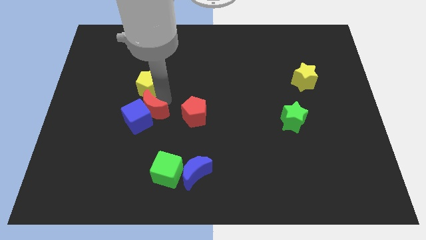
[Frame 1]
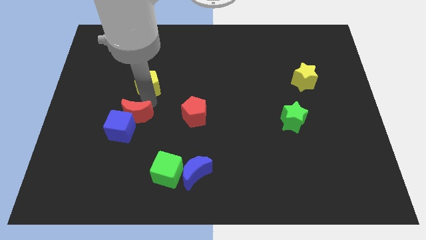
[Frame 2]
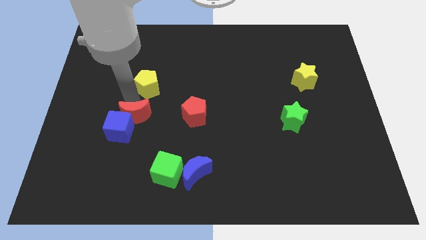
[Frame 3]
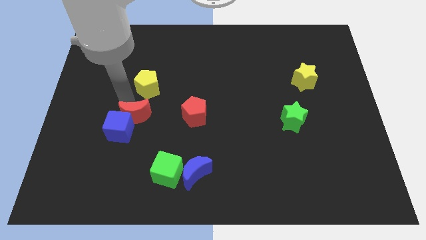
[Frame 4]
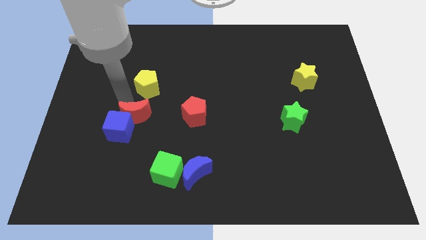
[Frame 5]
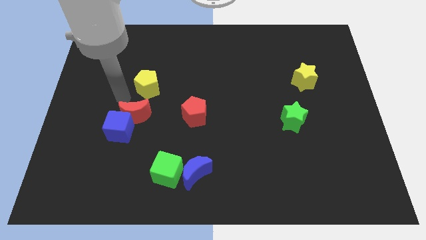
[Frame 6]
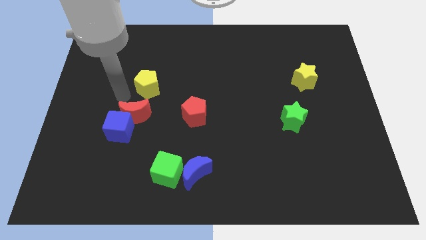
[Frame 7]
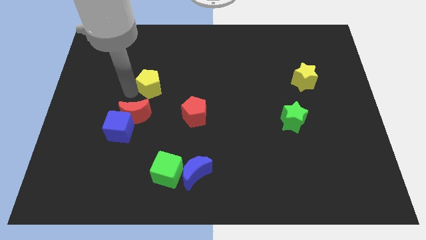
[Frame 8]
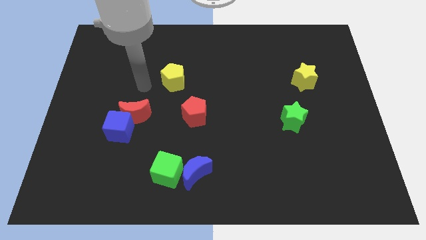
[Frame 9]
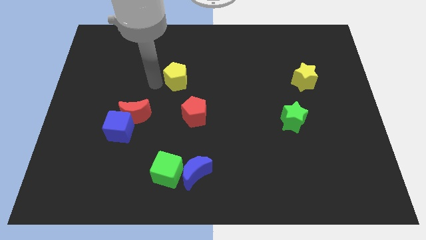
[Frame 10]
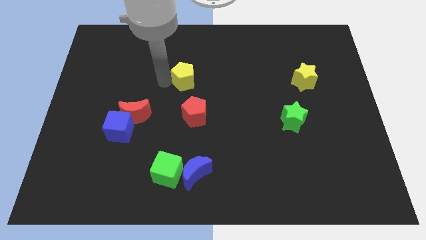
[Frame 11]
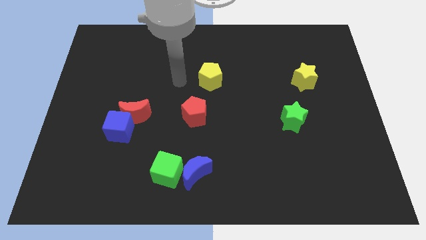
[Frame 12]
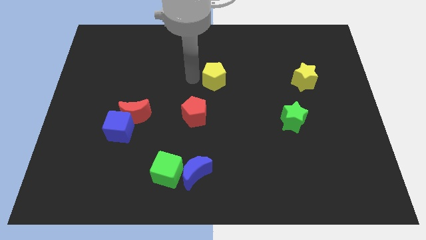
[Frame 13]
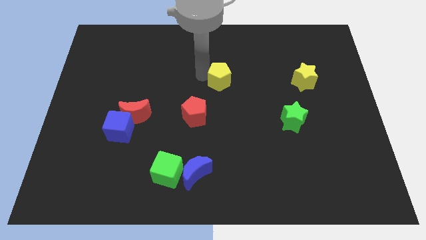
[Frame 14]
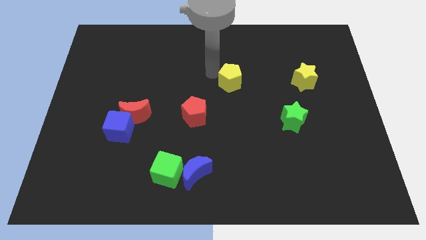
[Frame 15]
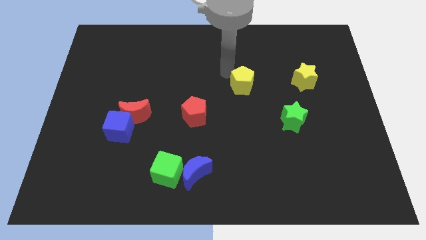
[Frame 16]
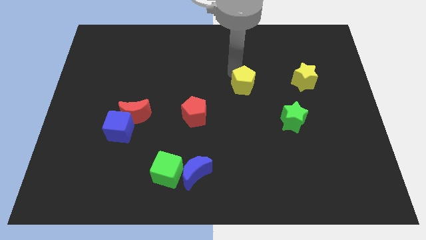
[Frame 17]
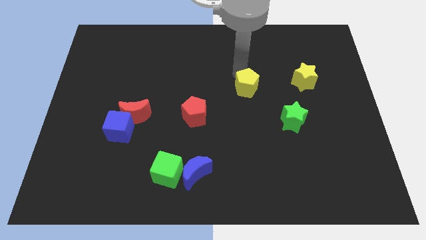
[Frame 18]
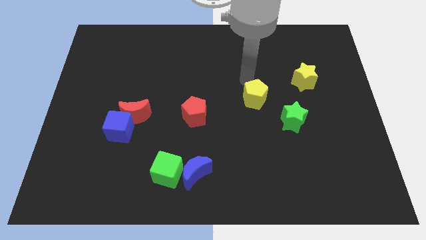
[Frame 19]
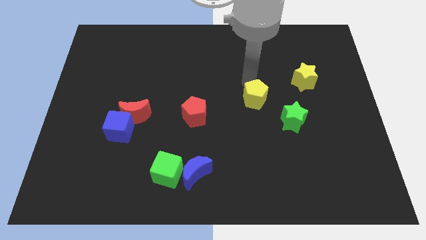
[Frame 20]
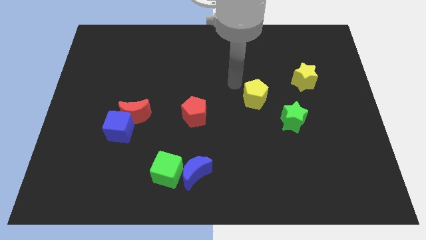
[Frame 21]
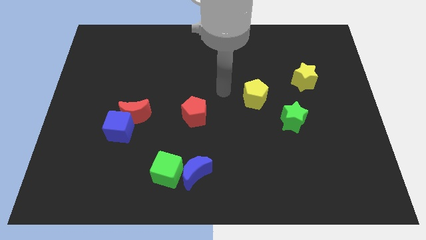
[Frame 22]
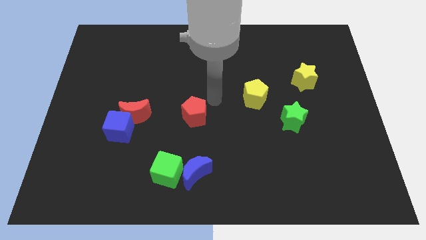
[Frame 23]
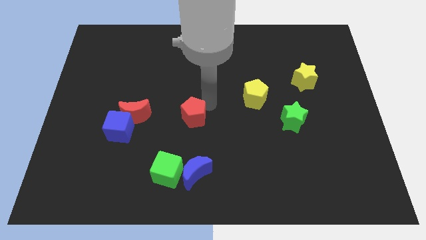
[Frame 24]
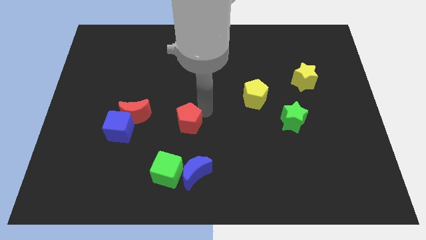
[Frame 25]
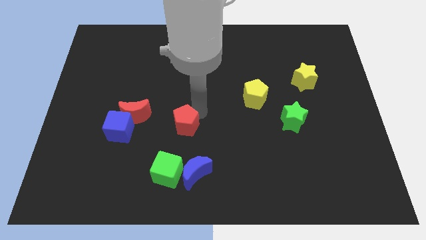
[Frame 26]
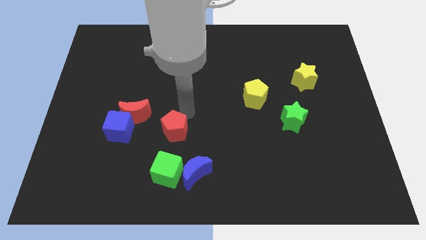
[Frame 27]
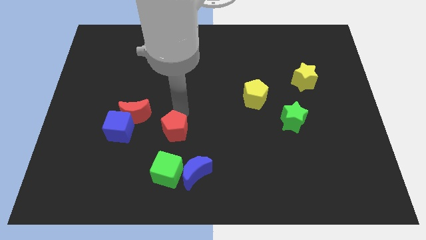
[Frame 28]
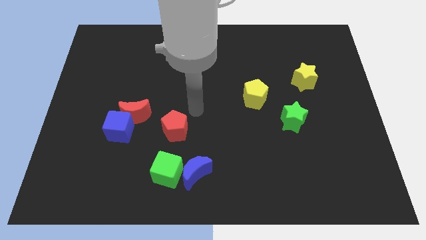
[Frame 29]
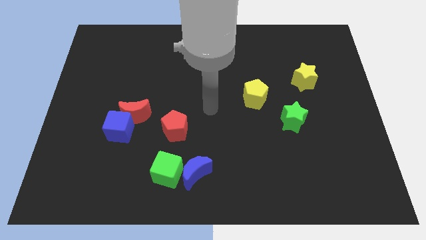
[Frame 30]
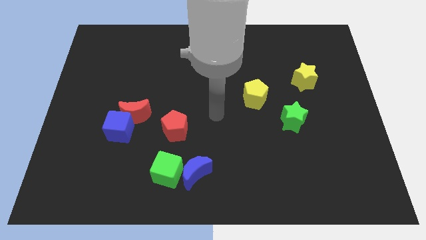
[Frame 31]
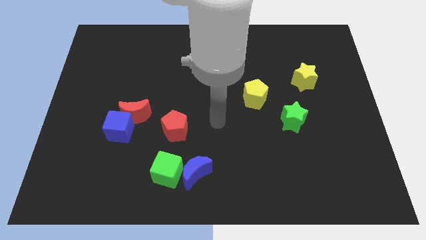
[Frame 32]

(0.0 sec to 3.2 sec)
place the yellow pentagon diagonally top right to the red pentagon

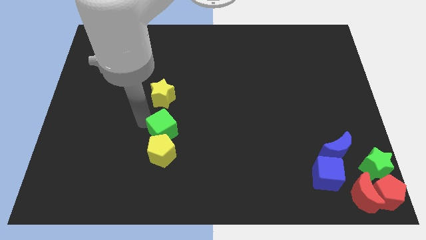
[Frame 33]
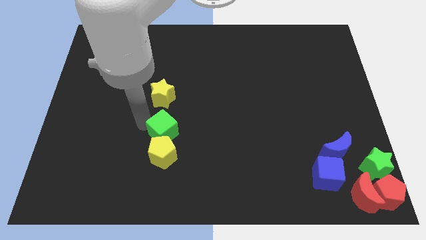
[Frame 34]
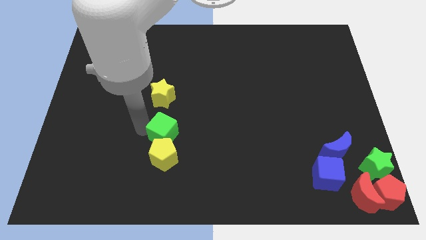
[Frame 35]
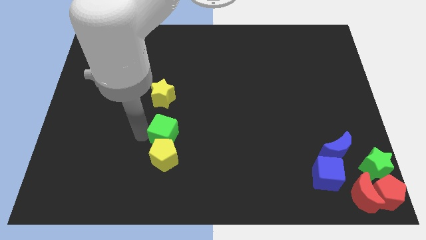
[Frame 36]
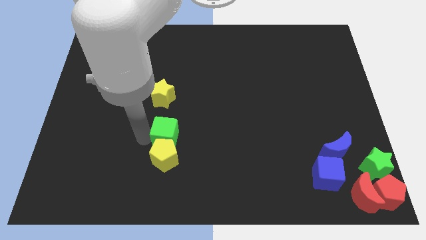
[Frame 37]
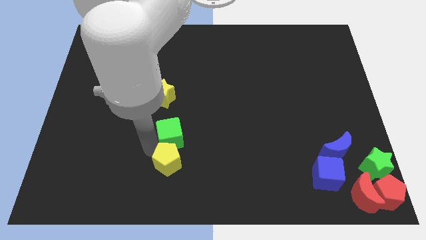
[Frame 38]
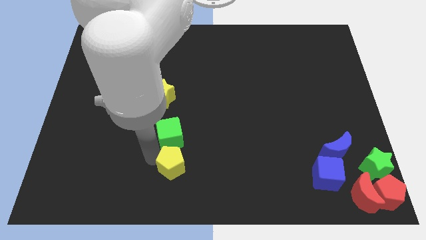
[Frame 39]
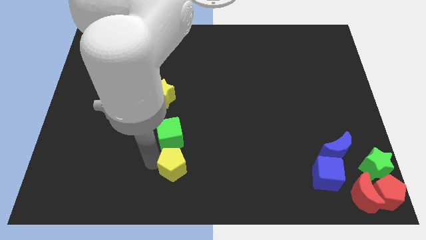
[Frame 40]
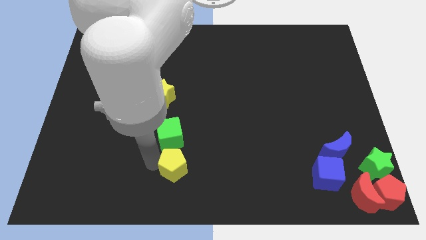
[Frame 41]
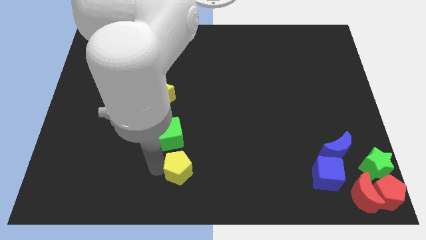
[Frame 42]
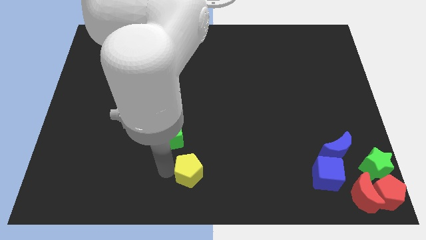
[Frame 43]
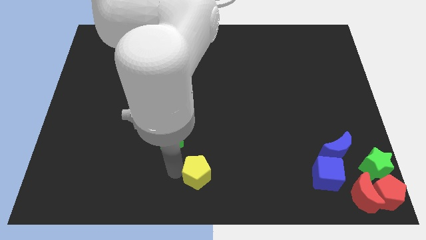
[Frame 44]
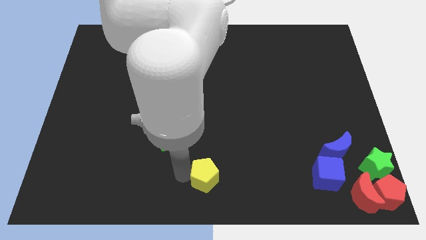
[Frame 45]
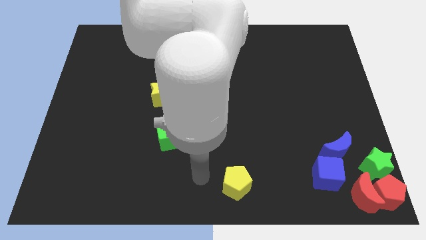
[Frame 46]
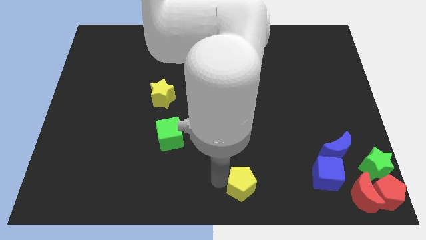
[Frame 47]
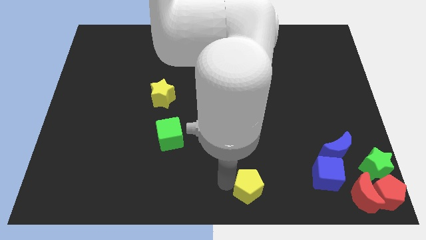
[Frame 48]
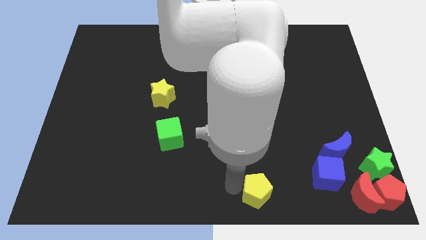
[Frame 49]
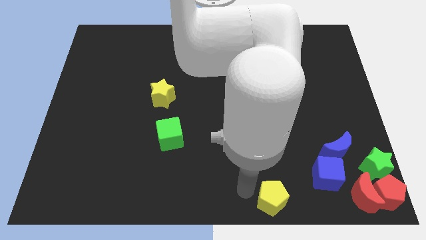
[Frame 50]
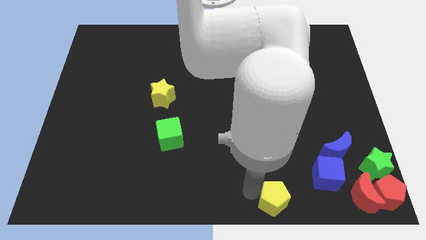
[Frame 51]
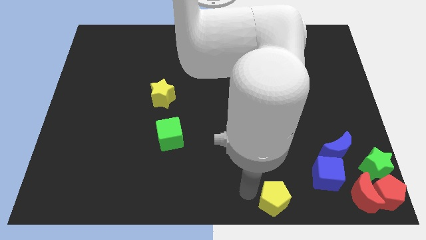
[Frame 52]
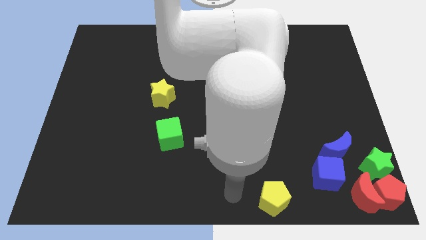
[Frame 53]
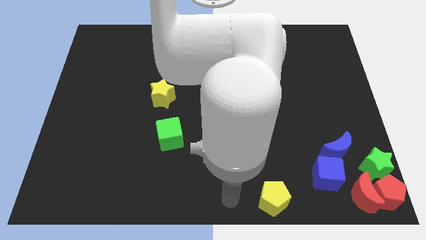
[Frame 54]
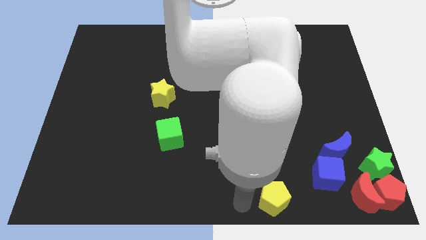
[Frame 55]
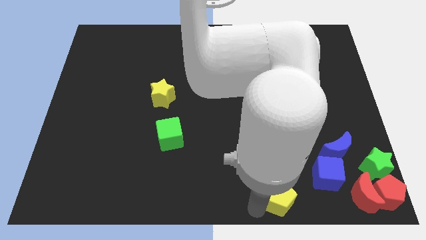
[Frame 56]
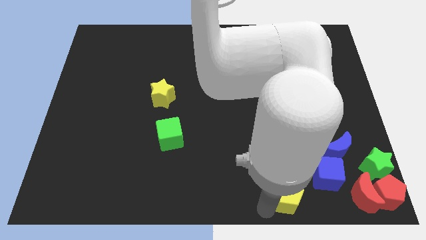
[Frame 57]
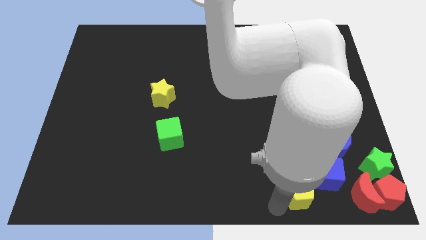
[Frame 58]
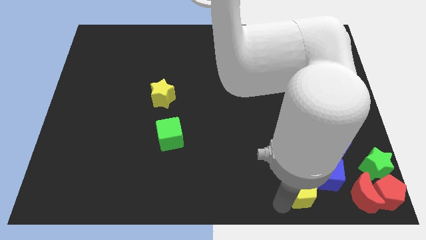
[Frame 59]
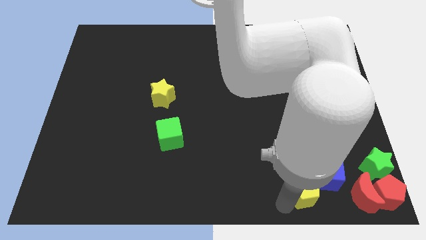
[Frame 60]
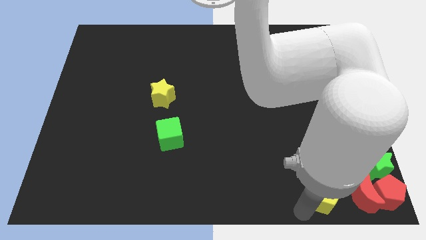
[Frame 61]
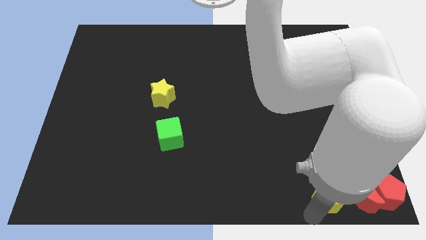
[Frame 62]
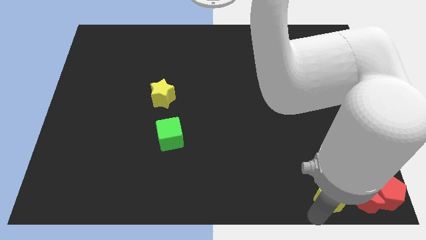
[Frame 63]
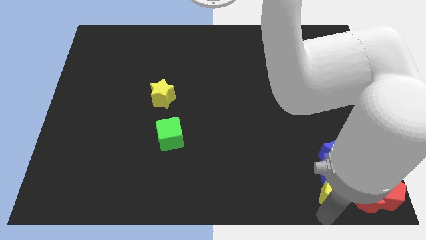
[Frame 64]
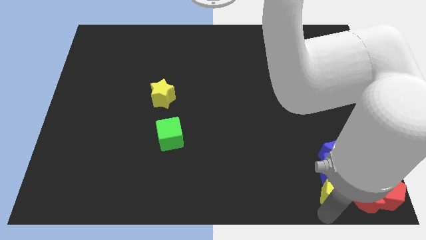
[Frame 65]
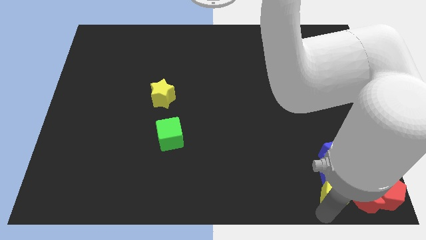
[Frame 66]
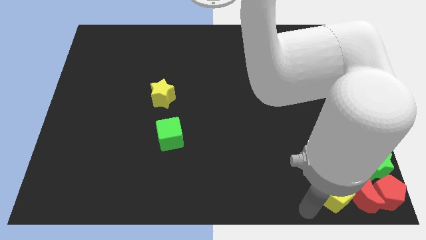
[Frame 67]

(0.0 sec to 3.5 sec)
slide the yellow pentagon into the bottom side of the blue cube

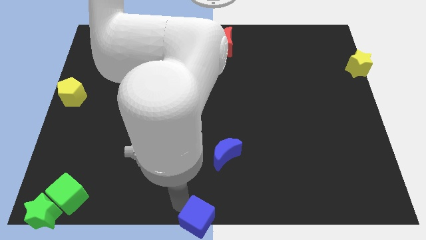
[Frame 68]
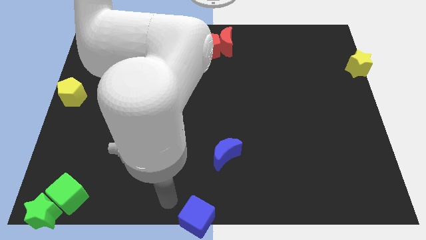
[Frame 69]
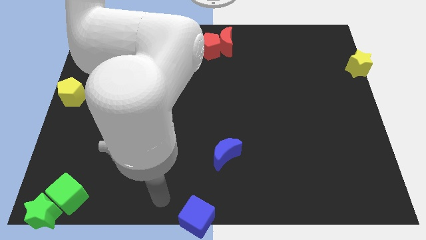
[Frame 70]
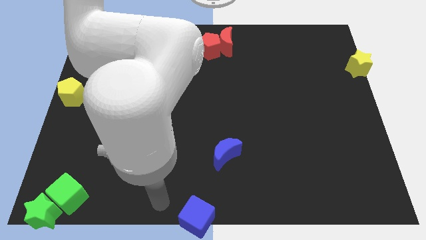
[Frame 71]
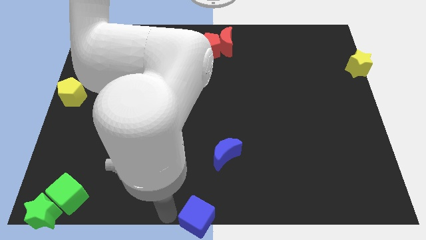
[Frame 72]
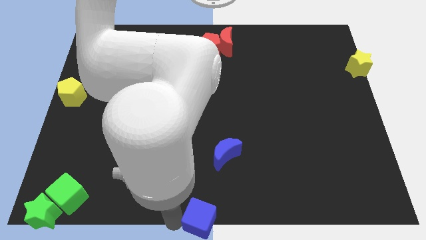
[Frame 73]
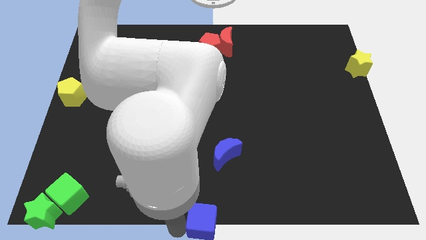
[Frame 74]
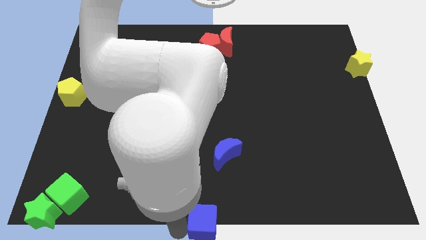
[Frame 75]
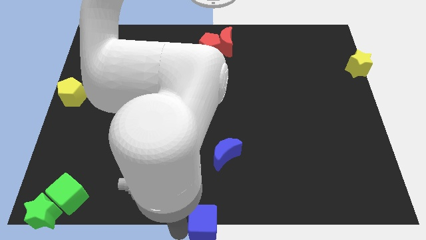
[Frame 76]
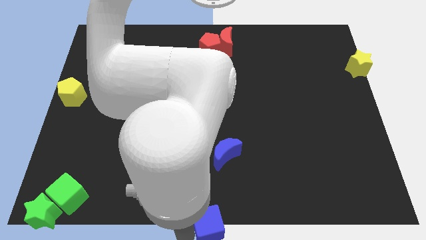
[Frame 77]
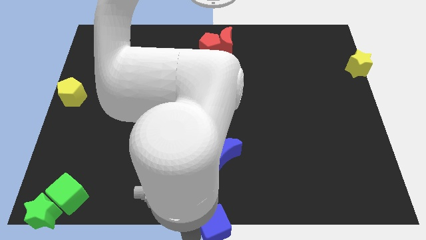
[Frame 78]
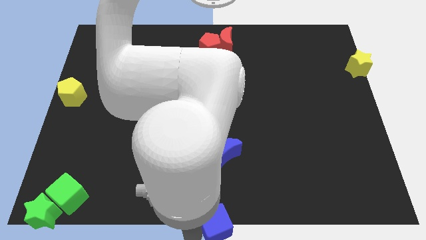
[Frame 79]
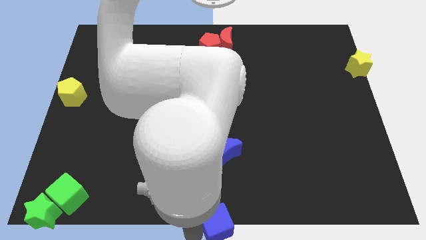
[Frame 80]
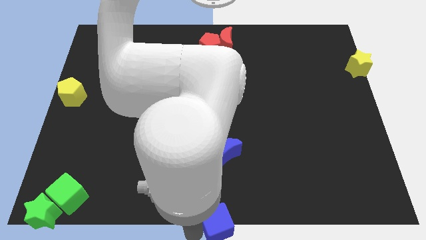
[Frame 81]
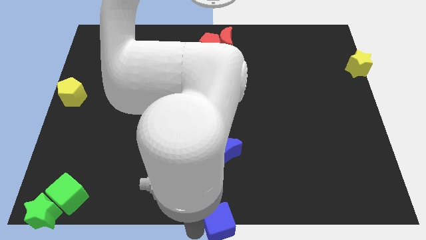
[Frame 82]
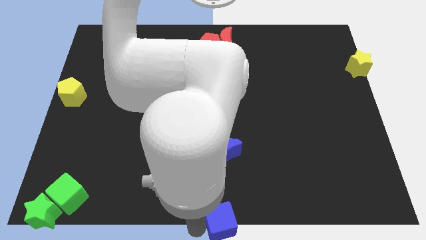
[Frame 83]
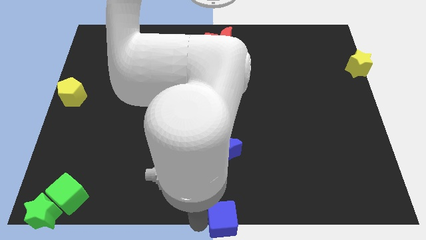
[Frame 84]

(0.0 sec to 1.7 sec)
place blue cube to the bottom of the blue crescent

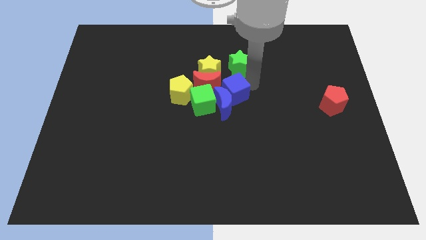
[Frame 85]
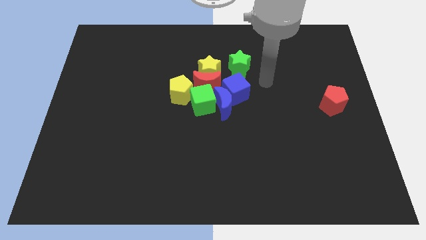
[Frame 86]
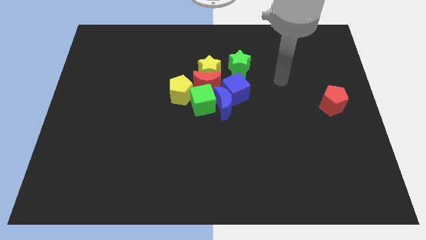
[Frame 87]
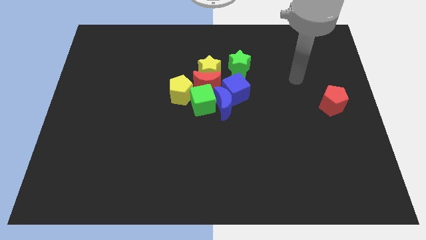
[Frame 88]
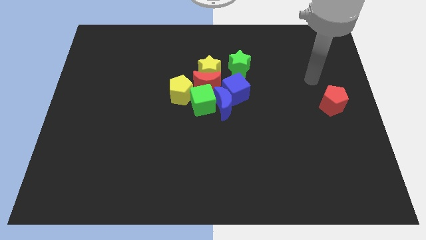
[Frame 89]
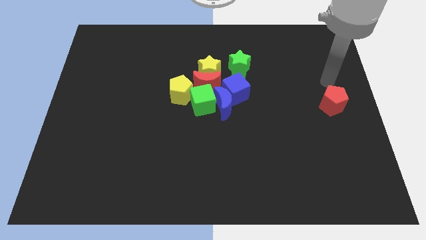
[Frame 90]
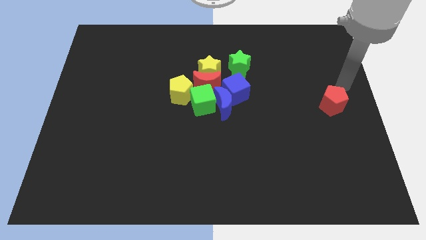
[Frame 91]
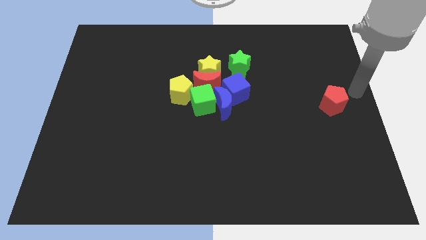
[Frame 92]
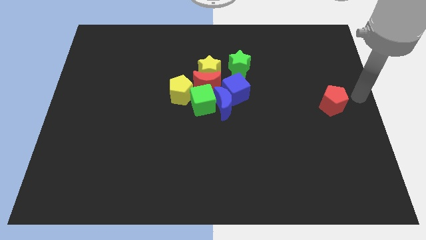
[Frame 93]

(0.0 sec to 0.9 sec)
move the arm away from the blue cube
